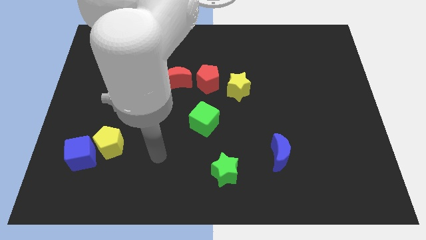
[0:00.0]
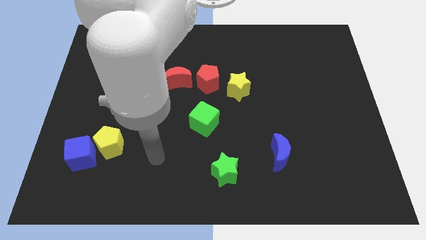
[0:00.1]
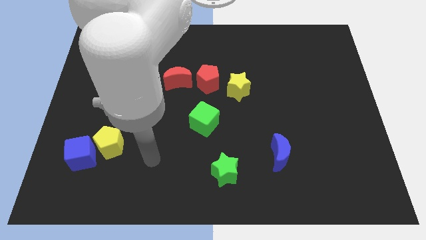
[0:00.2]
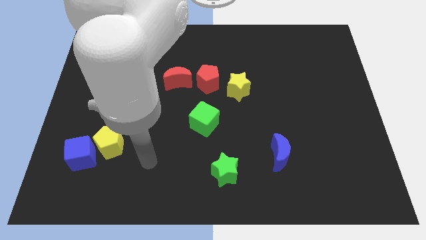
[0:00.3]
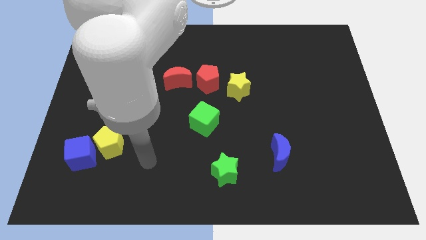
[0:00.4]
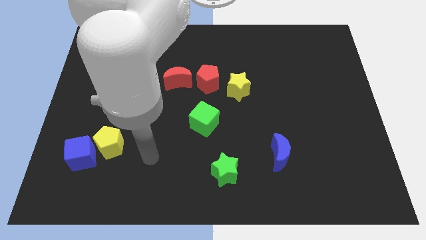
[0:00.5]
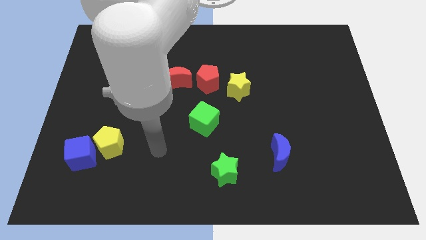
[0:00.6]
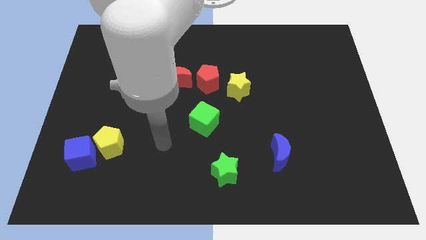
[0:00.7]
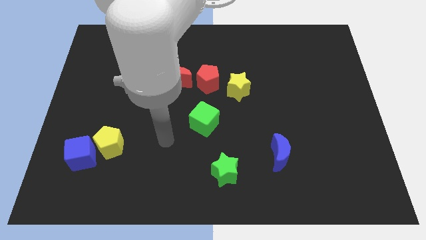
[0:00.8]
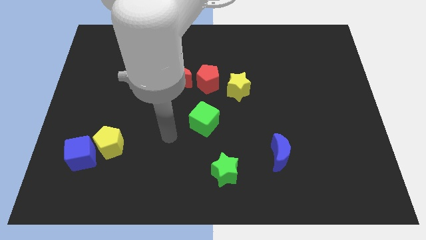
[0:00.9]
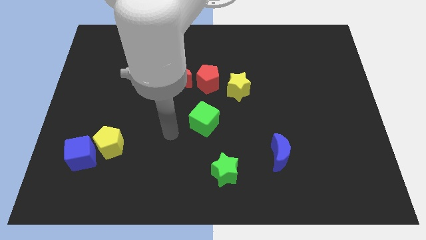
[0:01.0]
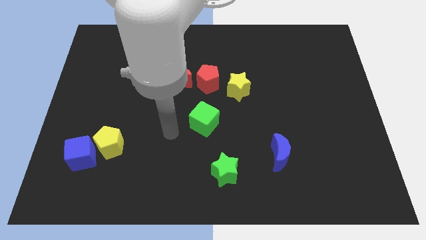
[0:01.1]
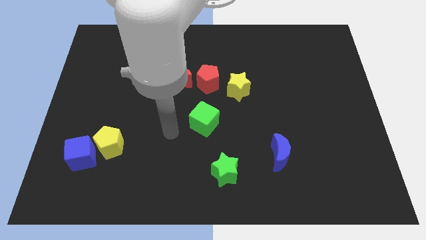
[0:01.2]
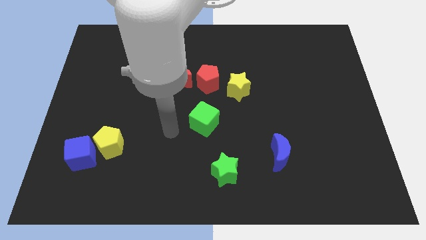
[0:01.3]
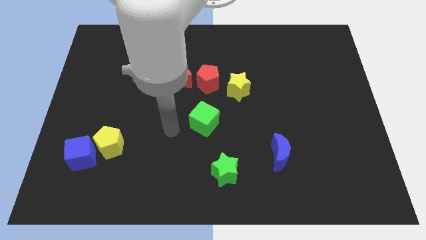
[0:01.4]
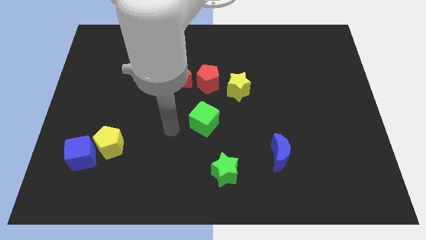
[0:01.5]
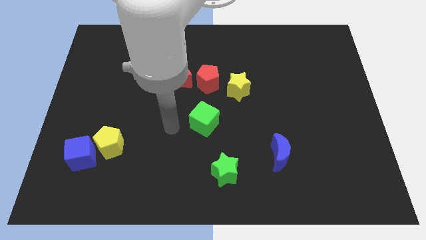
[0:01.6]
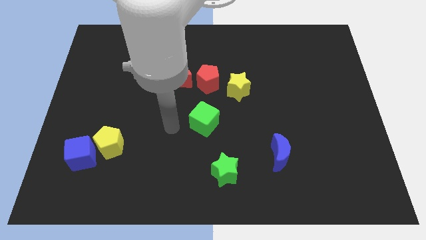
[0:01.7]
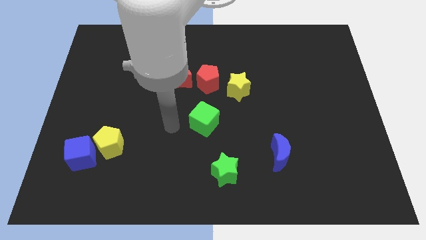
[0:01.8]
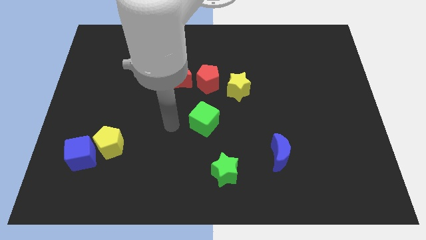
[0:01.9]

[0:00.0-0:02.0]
place your arm left to the green green cube

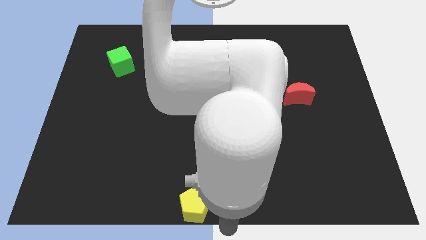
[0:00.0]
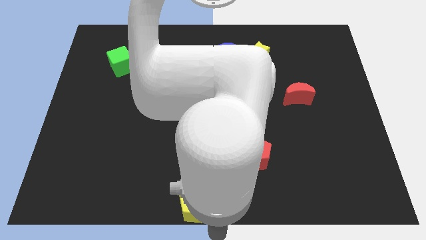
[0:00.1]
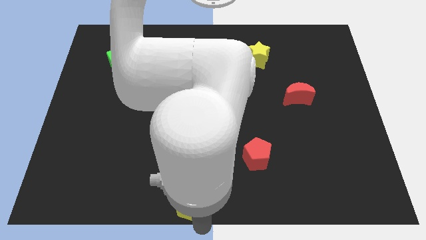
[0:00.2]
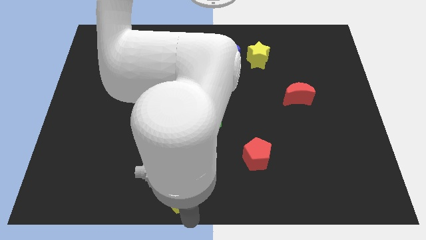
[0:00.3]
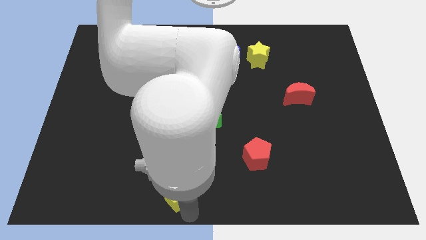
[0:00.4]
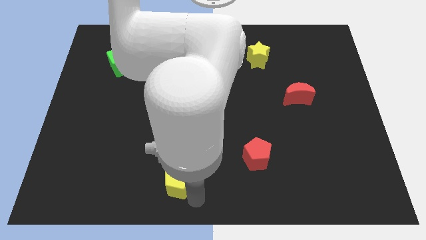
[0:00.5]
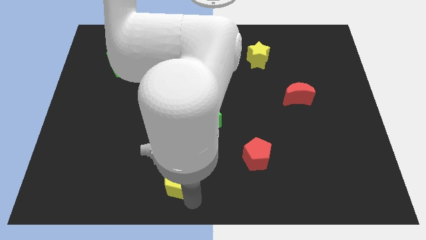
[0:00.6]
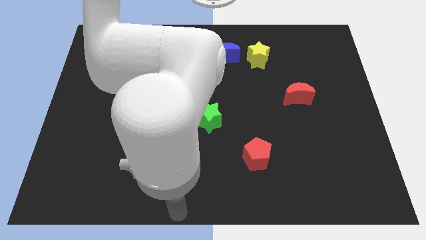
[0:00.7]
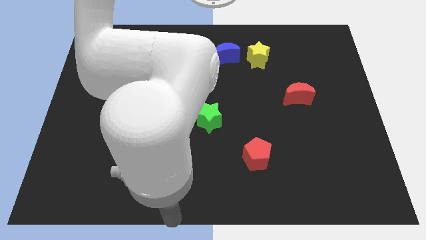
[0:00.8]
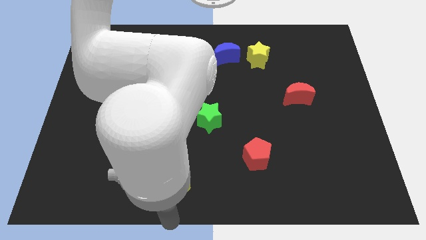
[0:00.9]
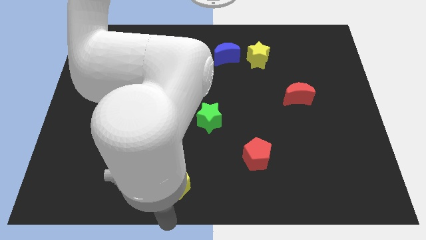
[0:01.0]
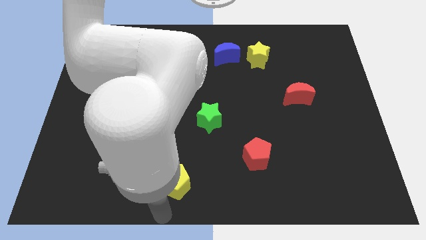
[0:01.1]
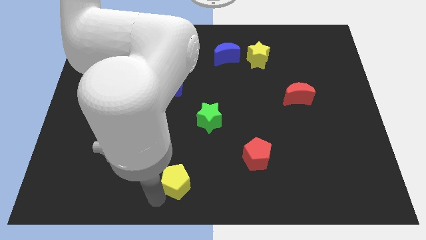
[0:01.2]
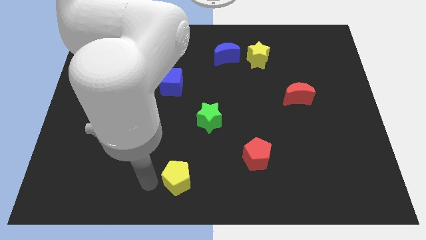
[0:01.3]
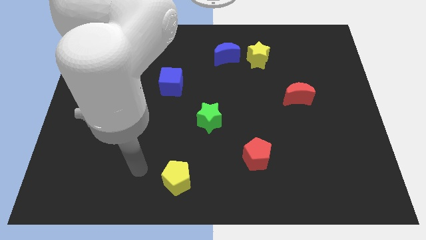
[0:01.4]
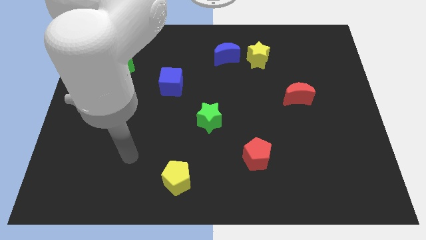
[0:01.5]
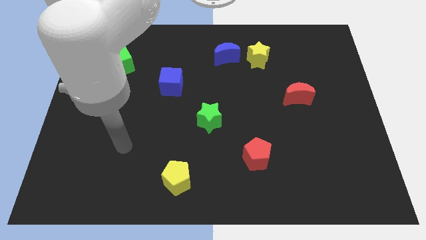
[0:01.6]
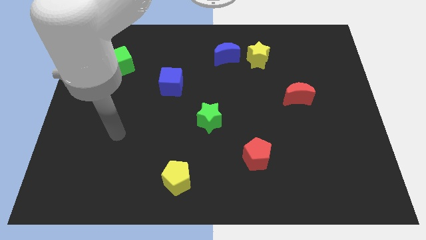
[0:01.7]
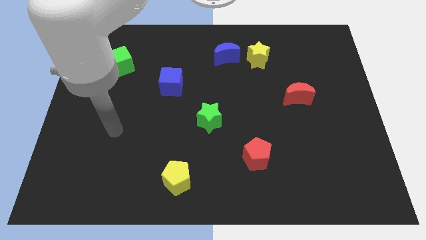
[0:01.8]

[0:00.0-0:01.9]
move the yellow pentagon parallel to the left of the red pentagon

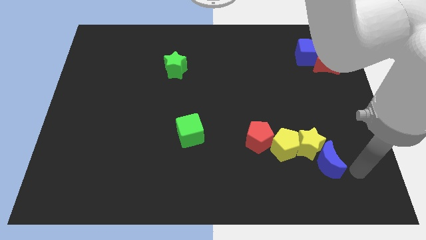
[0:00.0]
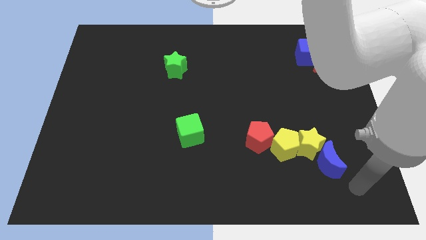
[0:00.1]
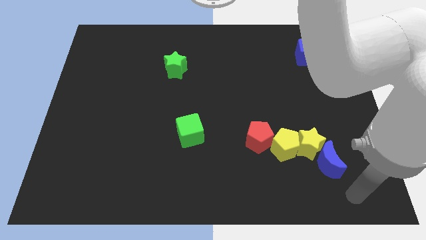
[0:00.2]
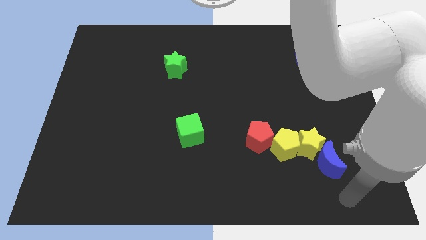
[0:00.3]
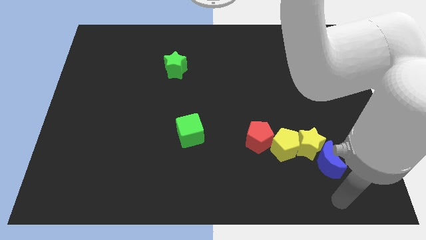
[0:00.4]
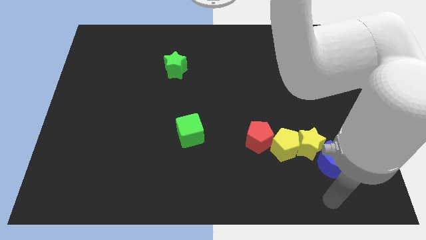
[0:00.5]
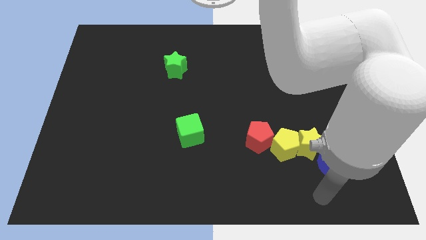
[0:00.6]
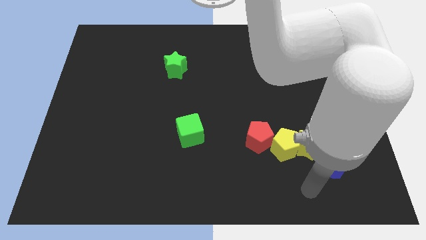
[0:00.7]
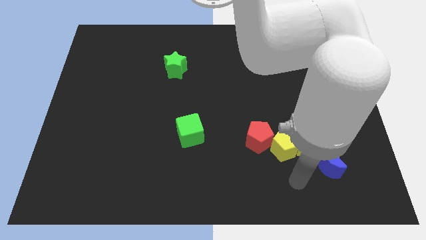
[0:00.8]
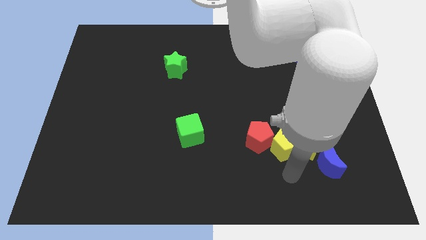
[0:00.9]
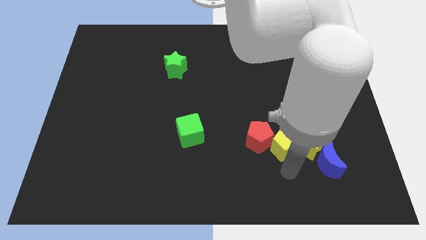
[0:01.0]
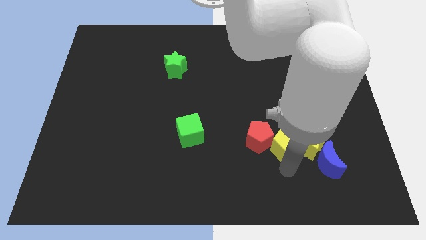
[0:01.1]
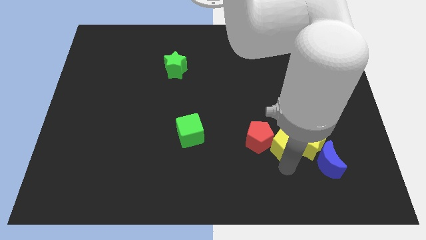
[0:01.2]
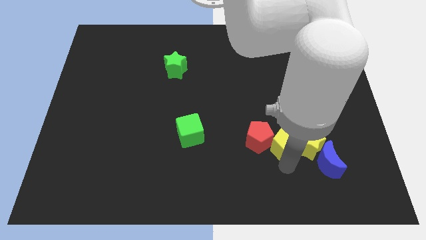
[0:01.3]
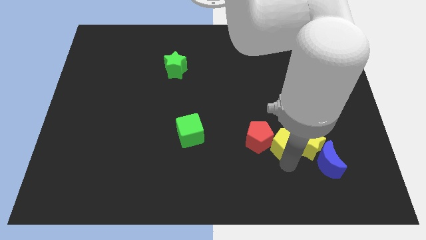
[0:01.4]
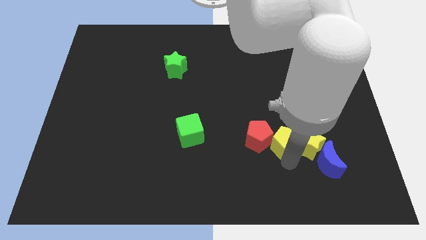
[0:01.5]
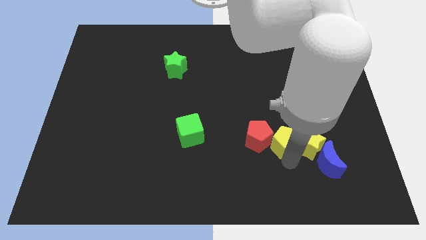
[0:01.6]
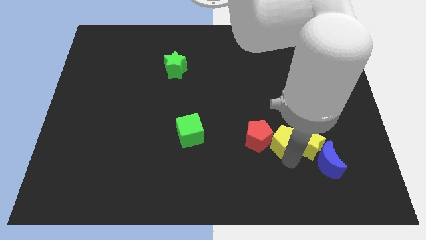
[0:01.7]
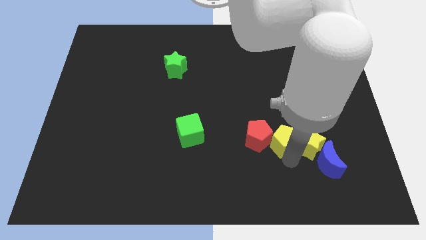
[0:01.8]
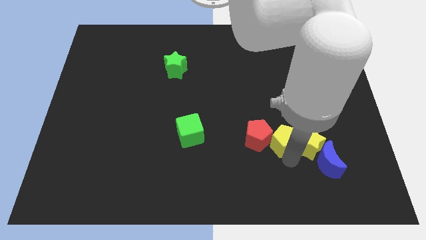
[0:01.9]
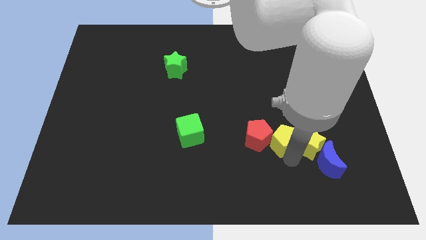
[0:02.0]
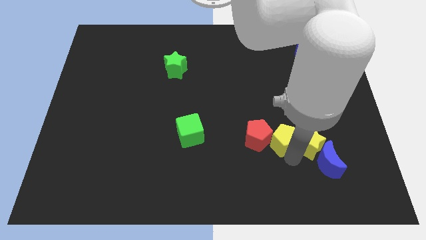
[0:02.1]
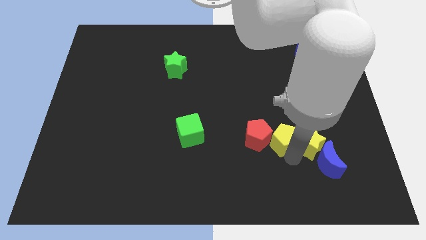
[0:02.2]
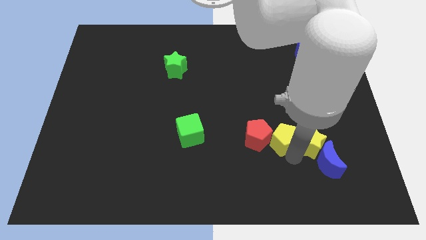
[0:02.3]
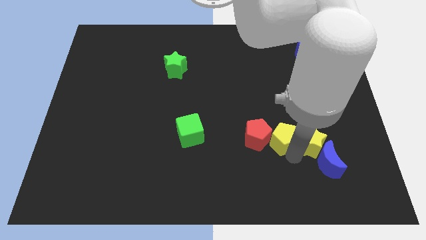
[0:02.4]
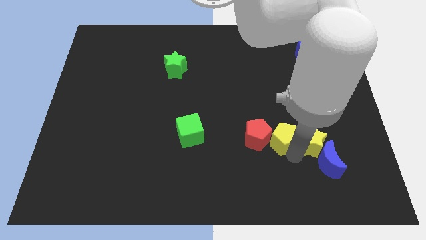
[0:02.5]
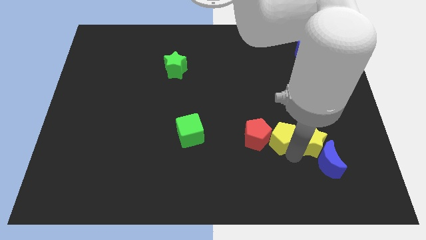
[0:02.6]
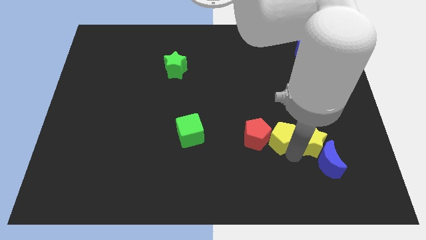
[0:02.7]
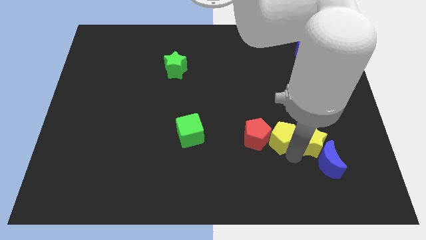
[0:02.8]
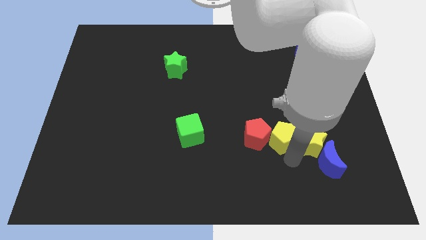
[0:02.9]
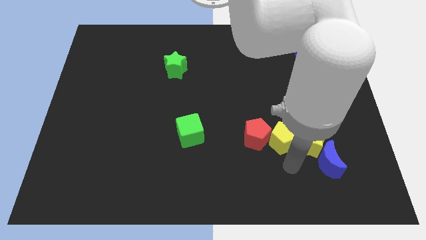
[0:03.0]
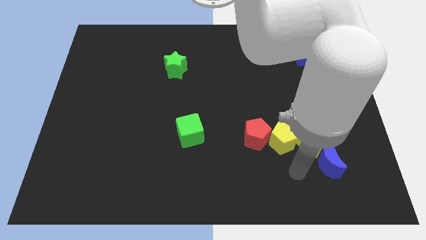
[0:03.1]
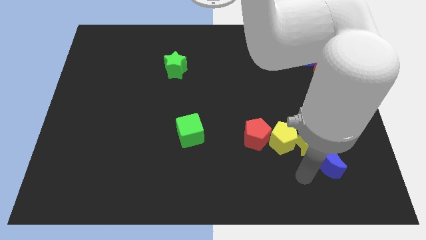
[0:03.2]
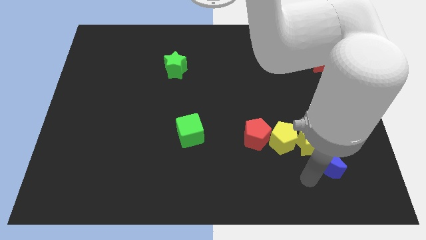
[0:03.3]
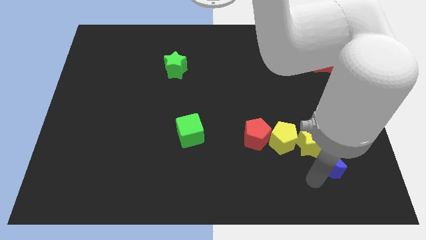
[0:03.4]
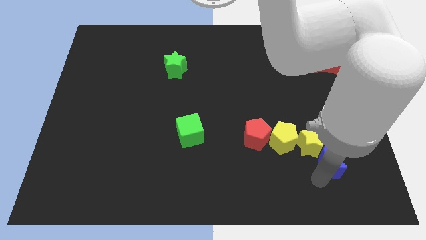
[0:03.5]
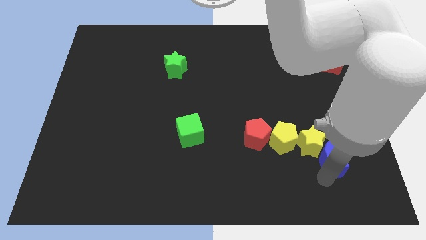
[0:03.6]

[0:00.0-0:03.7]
slightly push the yellow pentagon towards up

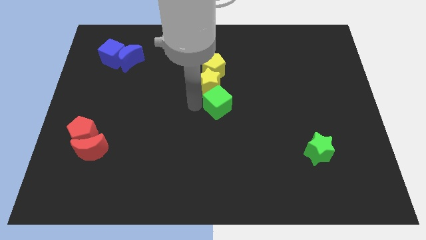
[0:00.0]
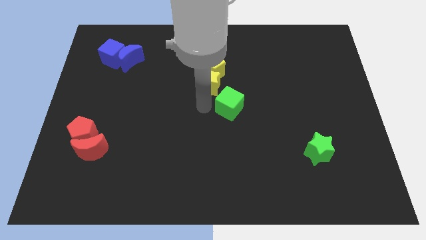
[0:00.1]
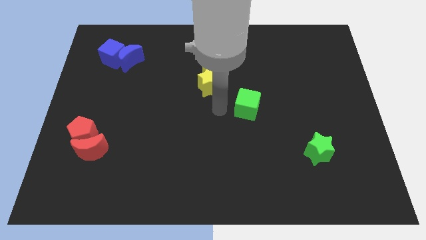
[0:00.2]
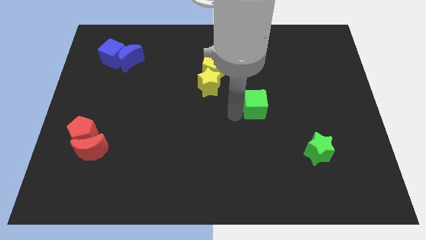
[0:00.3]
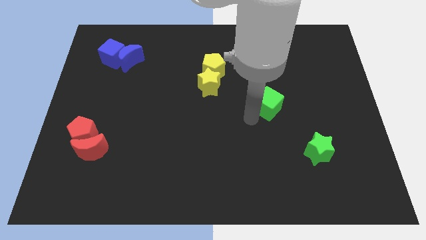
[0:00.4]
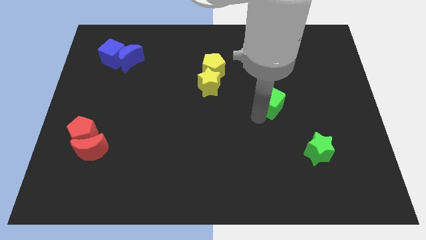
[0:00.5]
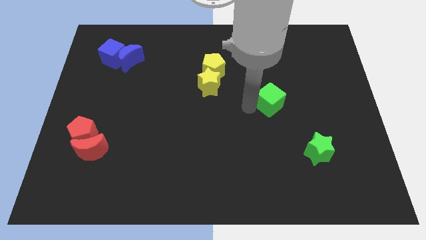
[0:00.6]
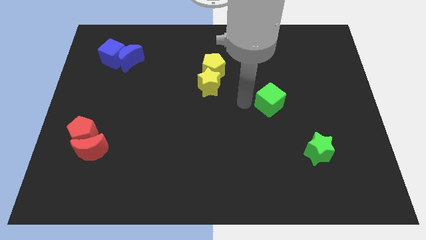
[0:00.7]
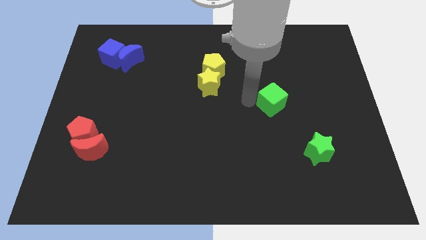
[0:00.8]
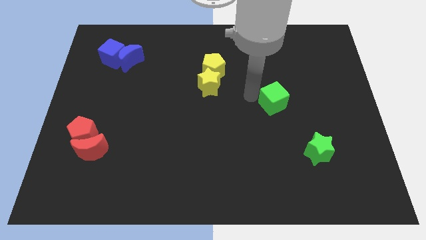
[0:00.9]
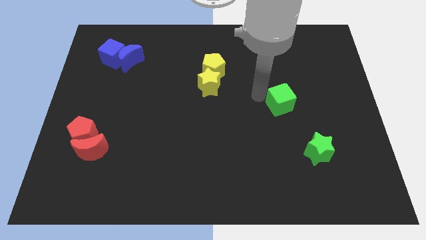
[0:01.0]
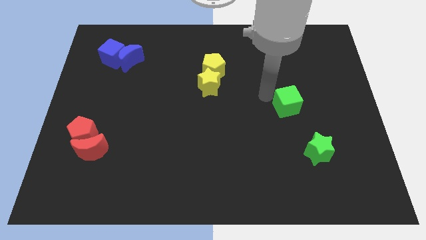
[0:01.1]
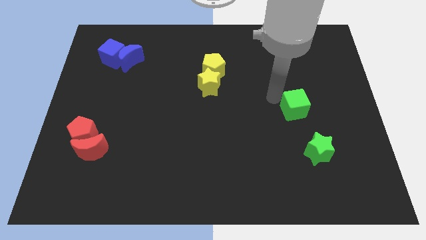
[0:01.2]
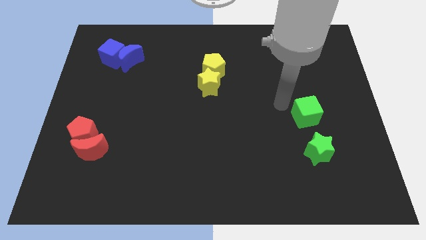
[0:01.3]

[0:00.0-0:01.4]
push the green cube to the top left of green star

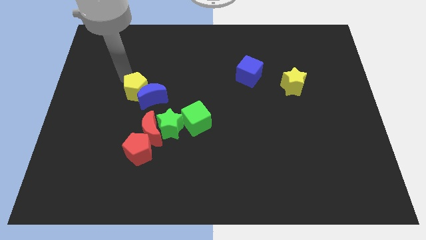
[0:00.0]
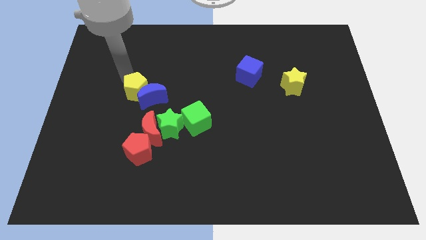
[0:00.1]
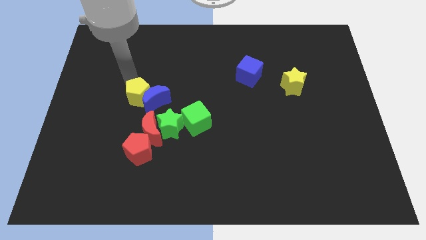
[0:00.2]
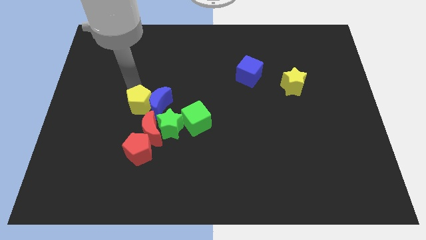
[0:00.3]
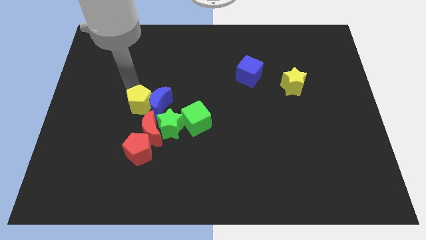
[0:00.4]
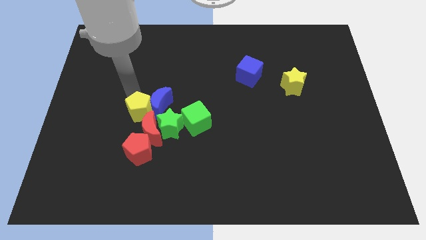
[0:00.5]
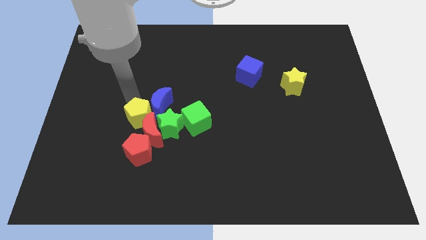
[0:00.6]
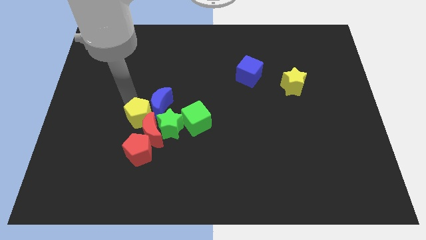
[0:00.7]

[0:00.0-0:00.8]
place the yellow pentagon above the red crescent
